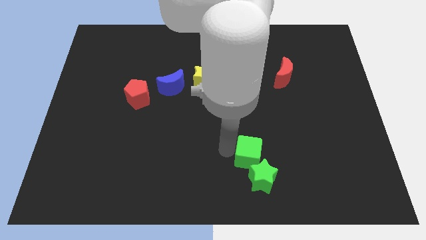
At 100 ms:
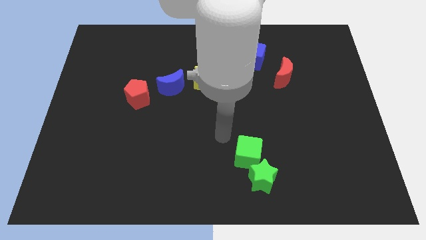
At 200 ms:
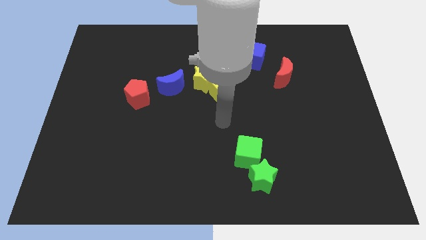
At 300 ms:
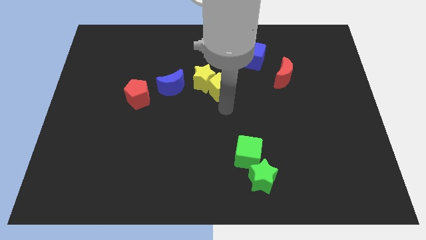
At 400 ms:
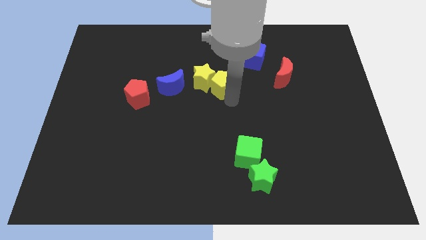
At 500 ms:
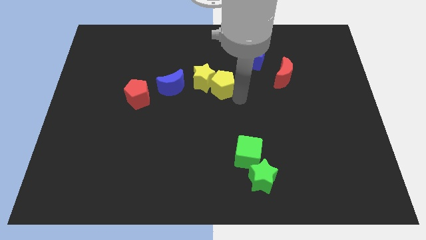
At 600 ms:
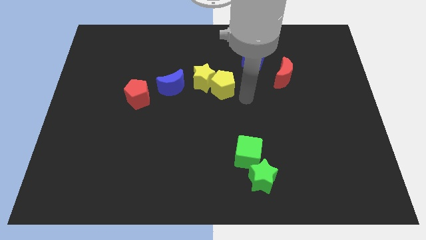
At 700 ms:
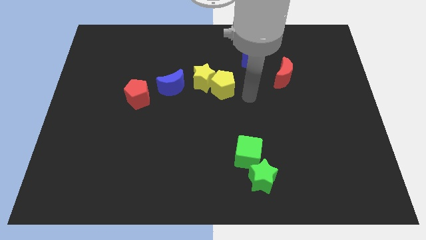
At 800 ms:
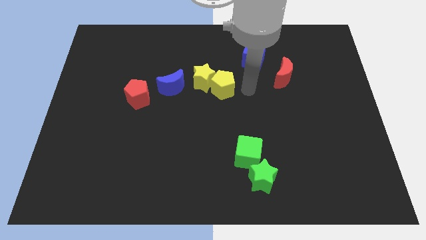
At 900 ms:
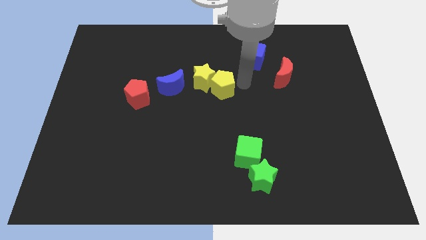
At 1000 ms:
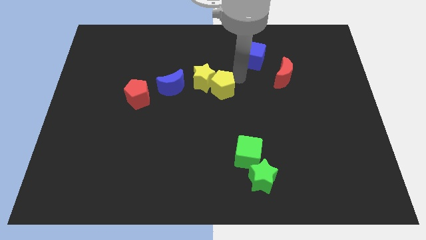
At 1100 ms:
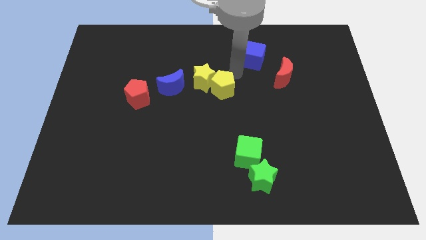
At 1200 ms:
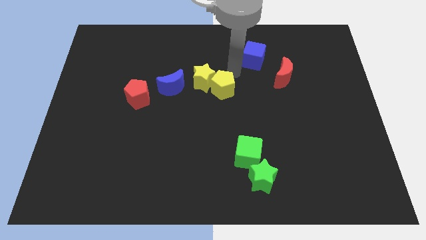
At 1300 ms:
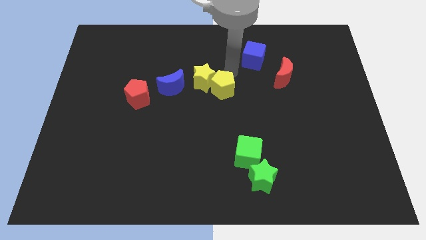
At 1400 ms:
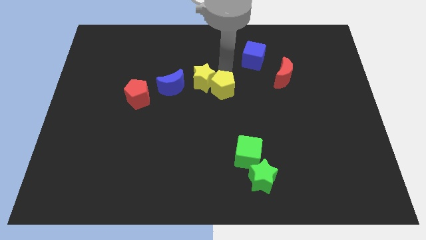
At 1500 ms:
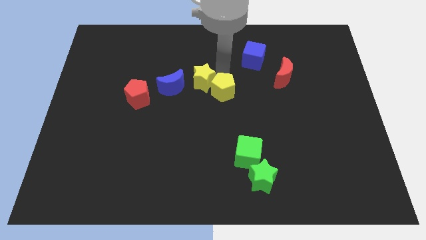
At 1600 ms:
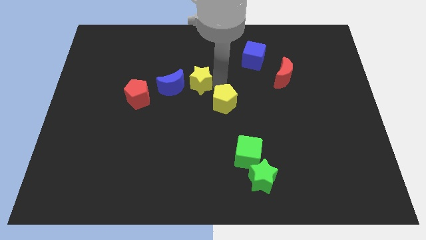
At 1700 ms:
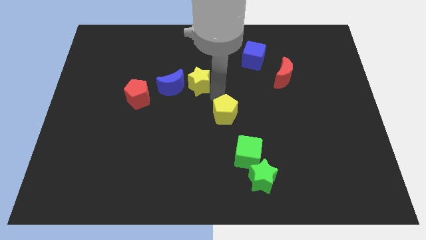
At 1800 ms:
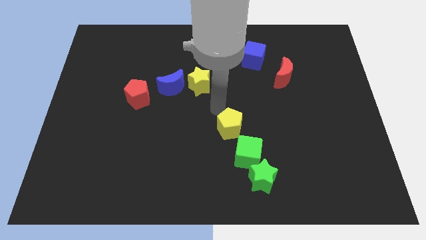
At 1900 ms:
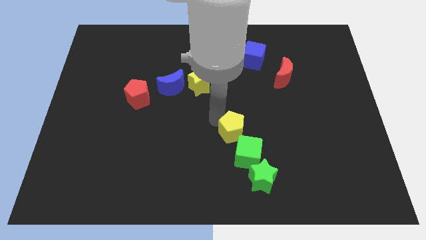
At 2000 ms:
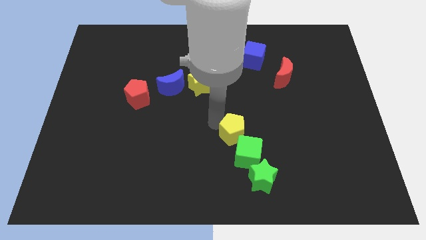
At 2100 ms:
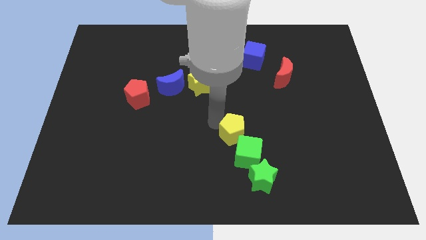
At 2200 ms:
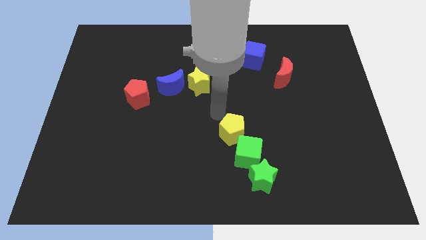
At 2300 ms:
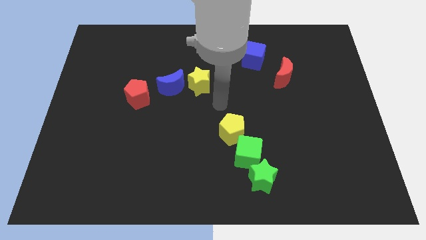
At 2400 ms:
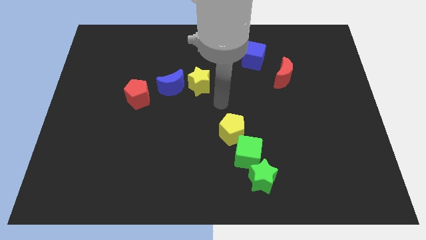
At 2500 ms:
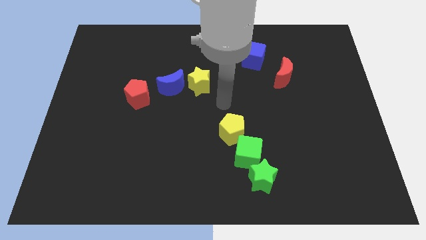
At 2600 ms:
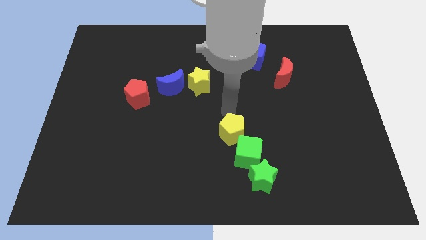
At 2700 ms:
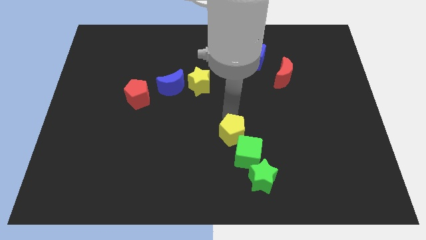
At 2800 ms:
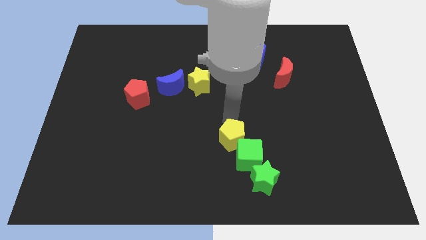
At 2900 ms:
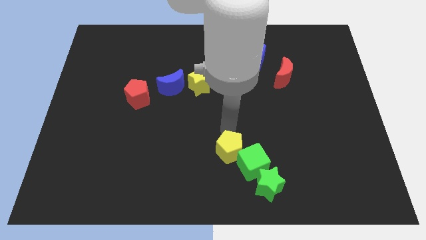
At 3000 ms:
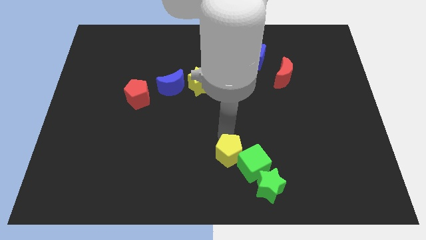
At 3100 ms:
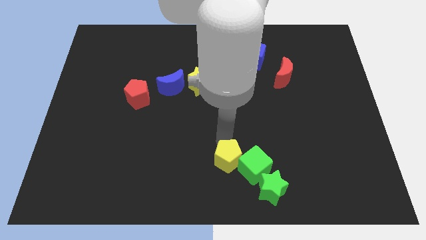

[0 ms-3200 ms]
move the yellow pentagon into the green cube

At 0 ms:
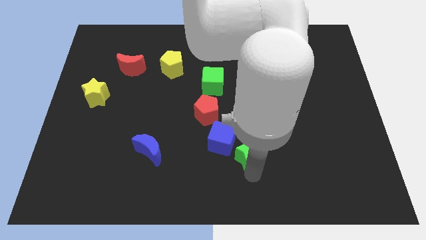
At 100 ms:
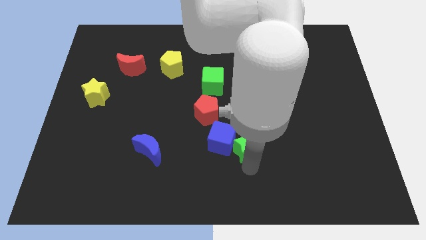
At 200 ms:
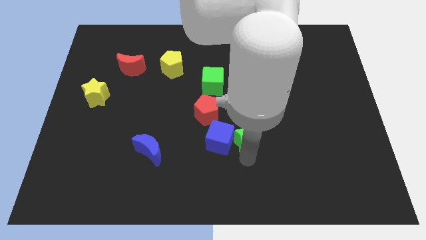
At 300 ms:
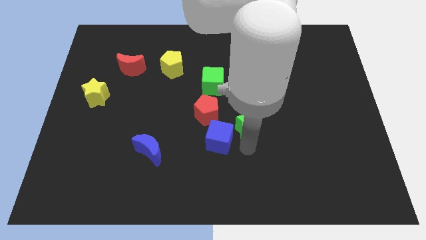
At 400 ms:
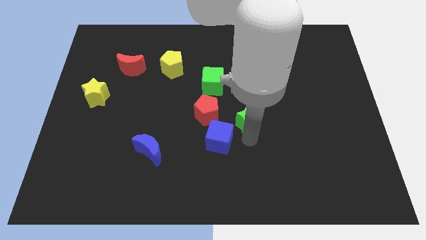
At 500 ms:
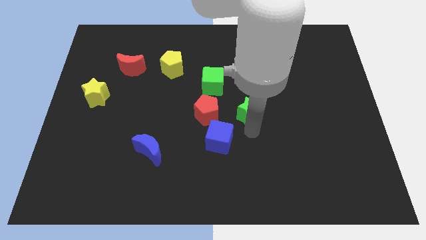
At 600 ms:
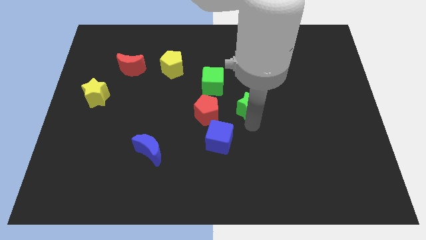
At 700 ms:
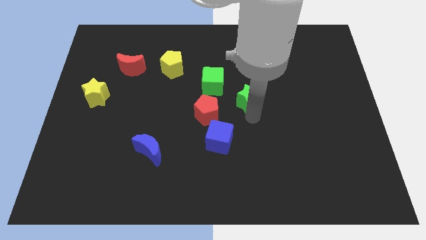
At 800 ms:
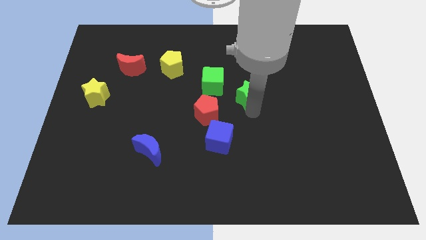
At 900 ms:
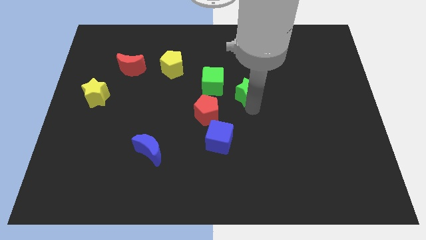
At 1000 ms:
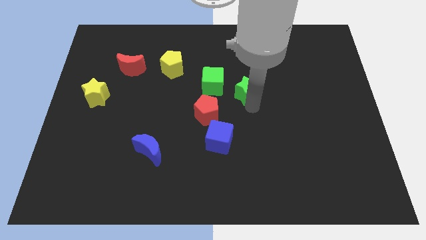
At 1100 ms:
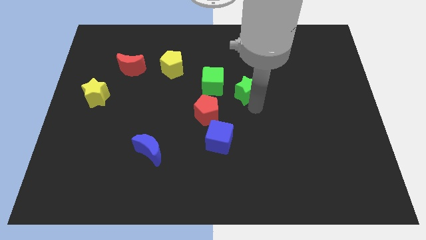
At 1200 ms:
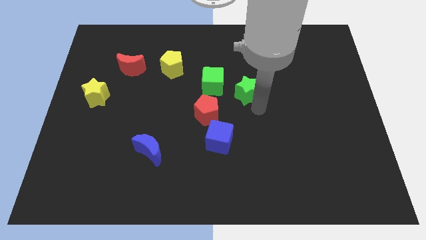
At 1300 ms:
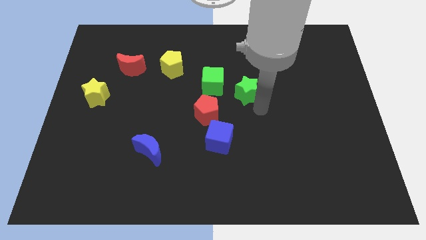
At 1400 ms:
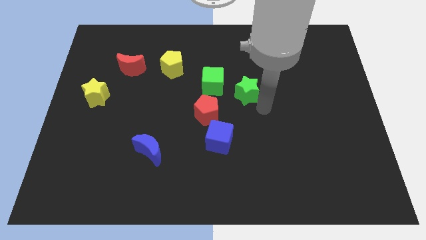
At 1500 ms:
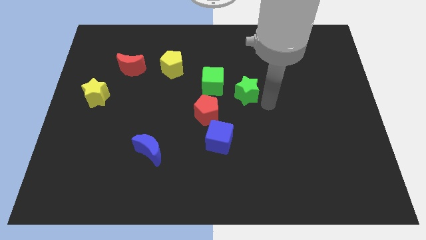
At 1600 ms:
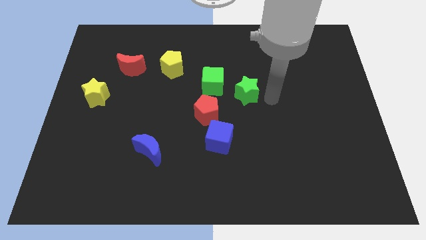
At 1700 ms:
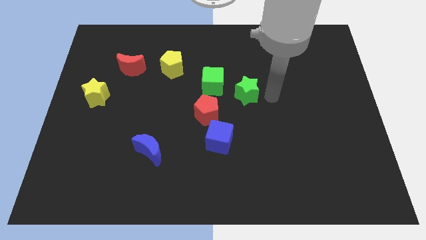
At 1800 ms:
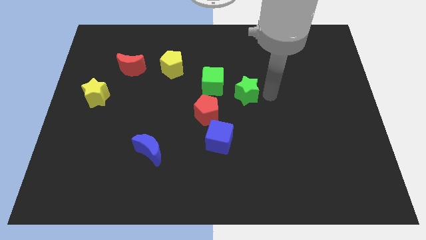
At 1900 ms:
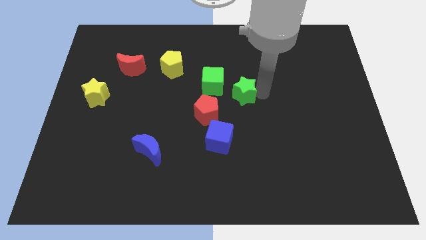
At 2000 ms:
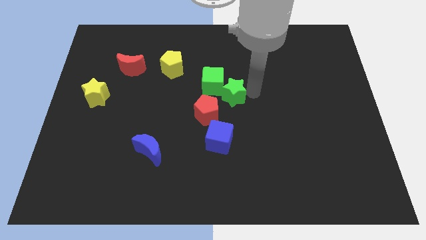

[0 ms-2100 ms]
push green star into green cube

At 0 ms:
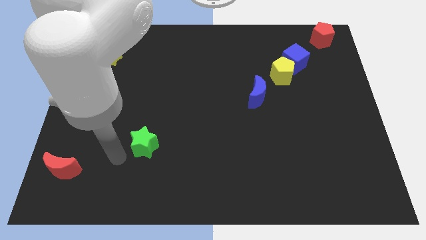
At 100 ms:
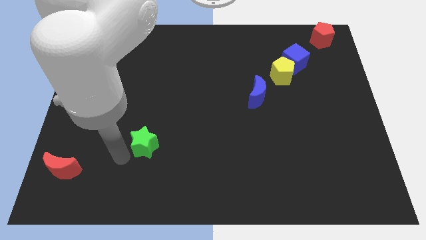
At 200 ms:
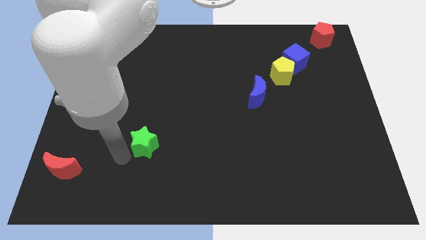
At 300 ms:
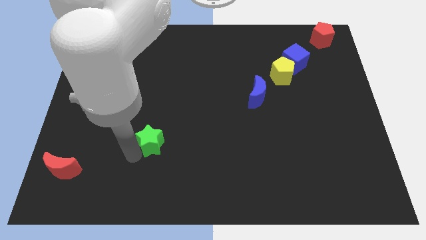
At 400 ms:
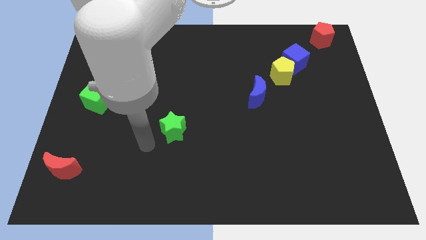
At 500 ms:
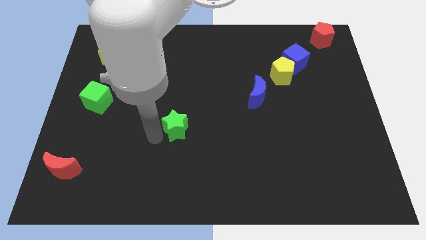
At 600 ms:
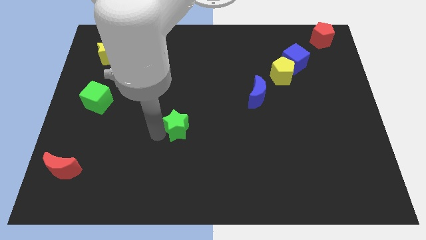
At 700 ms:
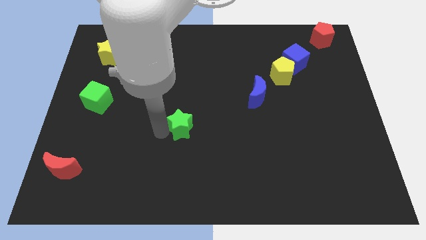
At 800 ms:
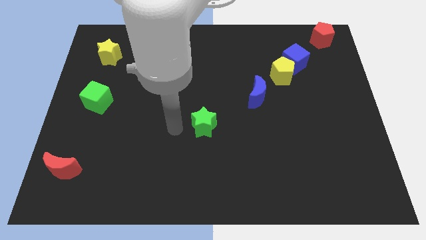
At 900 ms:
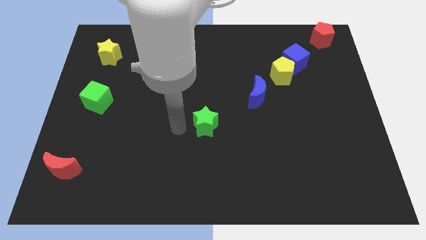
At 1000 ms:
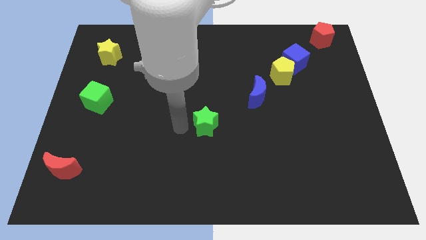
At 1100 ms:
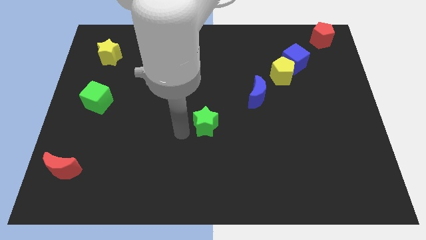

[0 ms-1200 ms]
move the yellow star to the center of the board

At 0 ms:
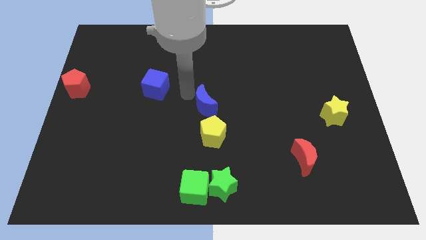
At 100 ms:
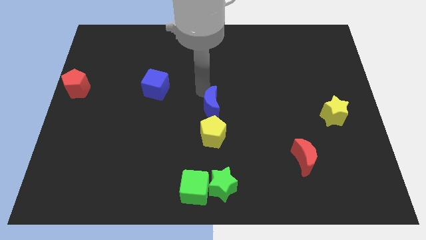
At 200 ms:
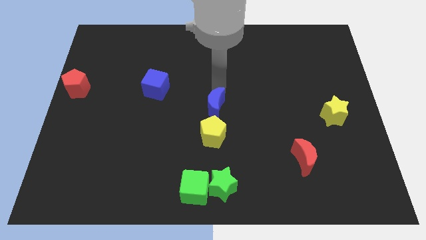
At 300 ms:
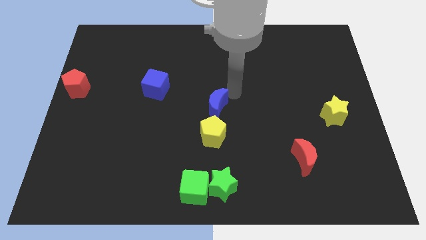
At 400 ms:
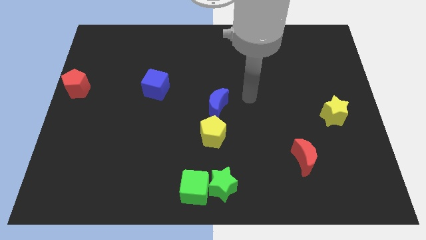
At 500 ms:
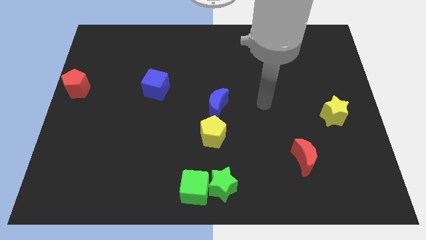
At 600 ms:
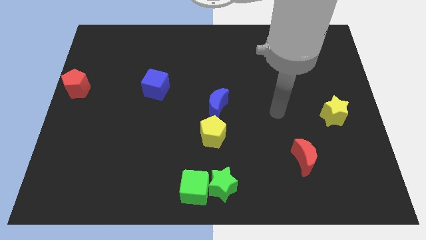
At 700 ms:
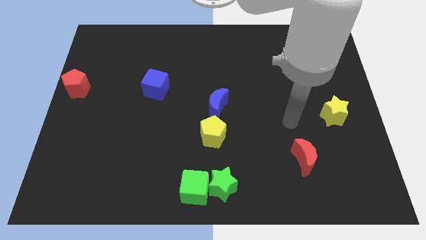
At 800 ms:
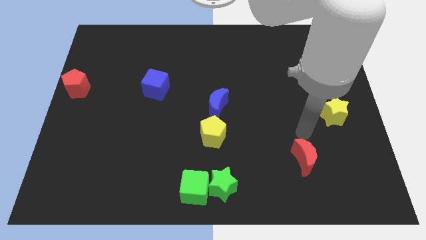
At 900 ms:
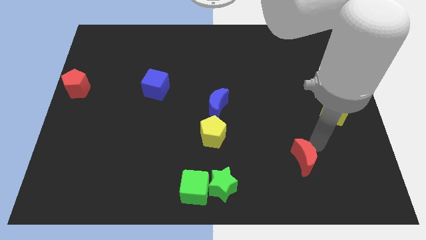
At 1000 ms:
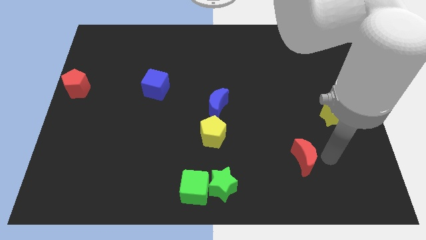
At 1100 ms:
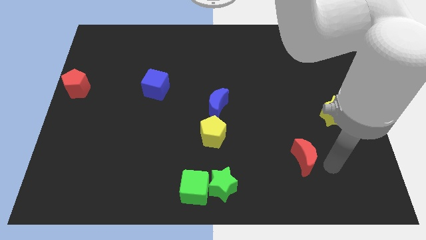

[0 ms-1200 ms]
tap at the top side of the blue crescent

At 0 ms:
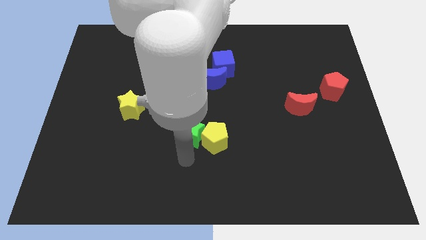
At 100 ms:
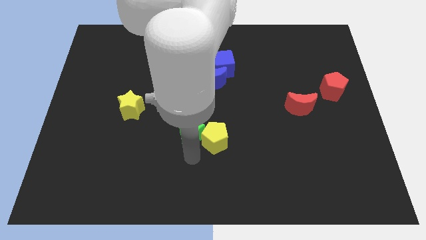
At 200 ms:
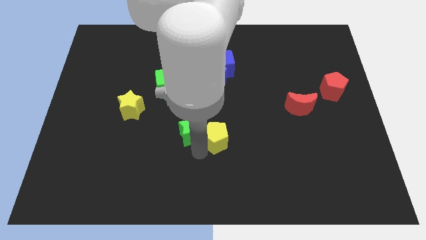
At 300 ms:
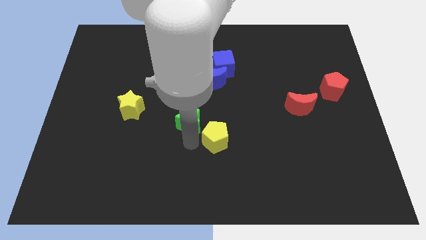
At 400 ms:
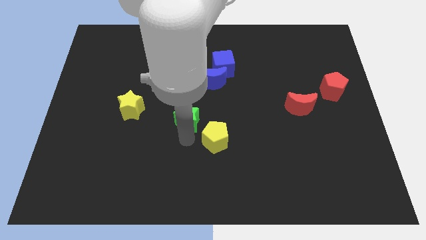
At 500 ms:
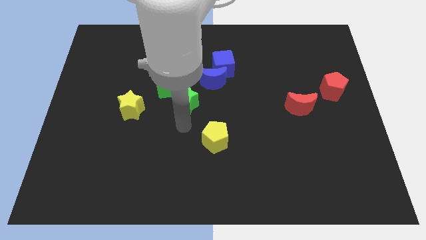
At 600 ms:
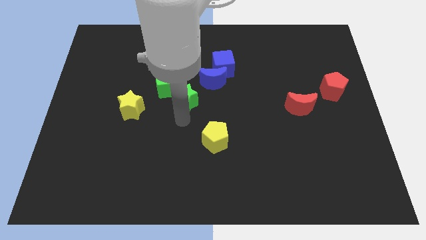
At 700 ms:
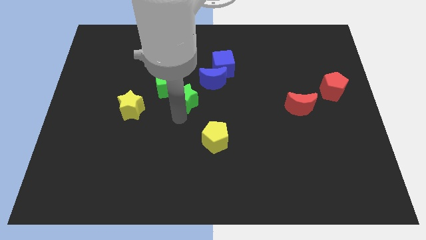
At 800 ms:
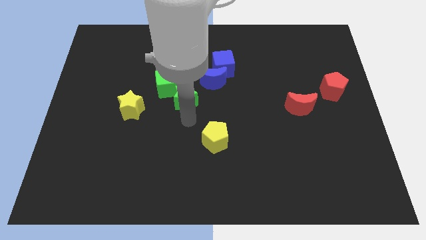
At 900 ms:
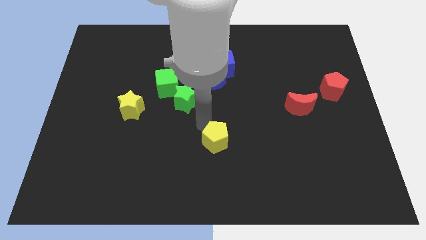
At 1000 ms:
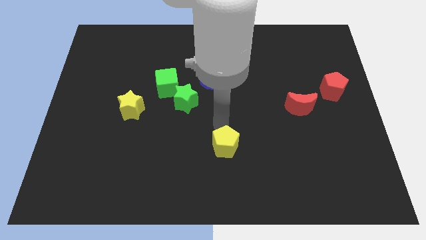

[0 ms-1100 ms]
move the green star into the green cube

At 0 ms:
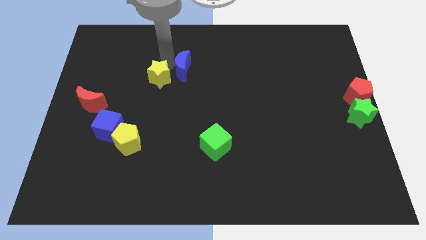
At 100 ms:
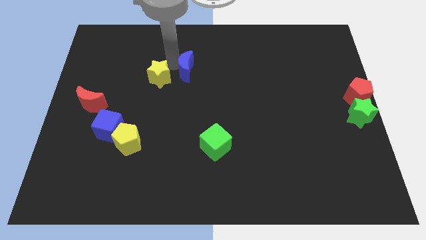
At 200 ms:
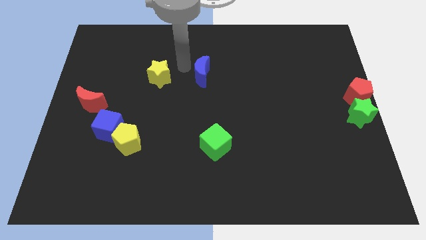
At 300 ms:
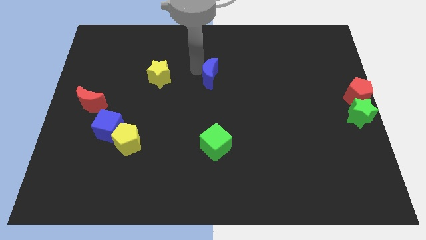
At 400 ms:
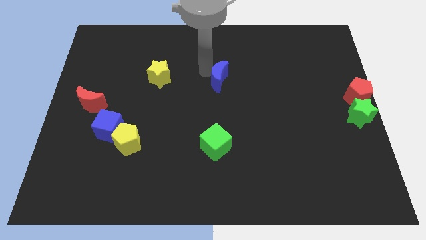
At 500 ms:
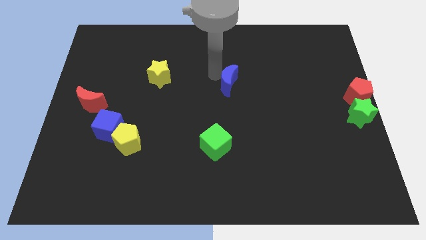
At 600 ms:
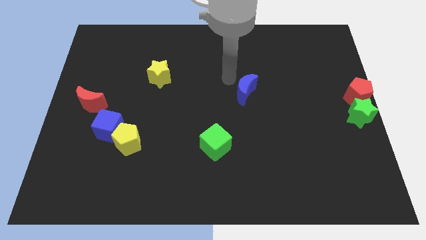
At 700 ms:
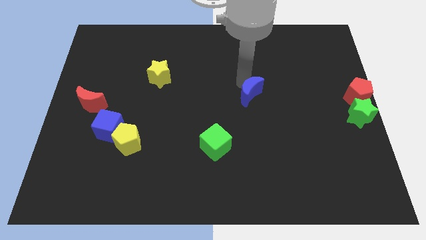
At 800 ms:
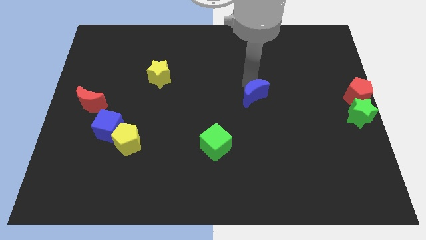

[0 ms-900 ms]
move the blue crescent to the top right of the green cube
